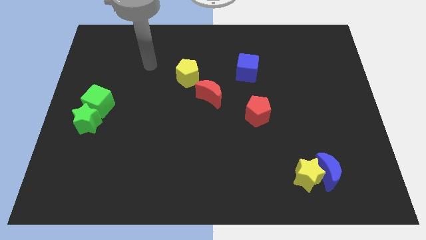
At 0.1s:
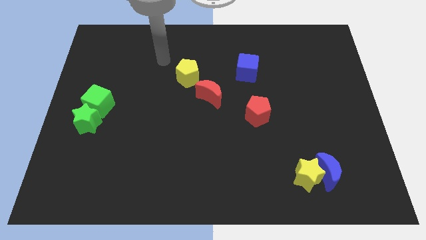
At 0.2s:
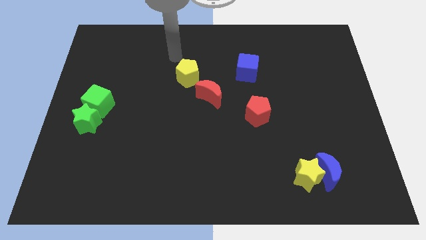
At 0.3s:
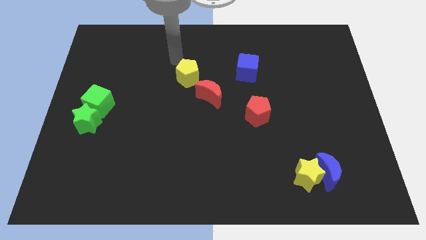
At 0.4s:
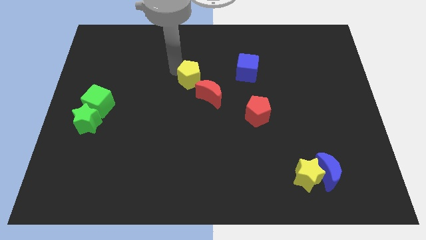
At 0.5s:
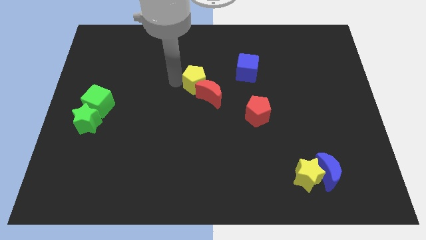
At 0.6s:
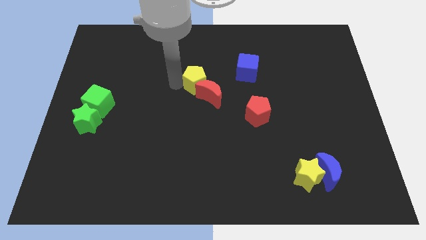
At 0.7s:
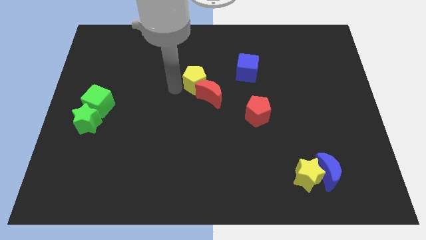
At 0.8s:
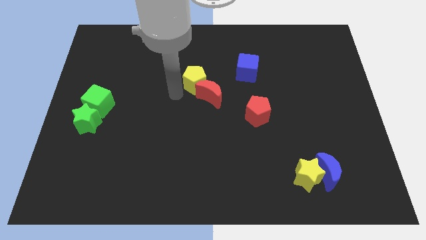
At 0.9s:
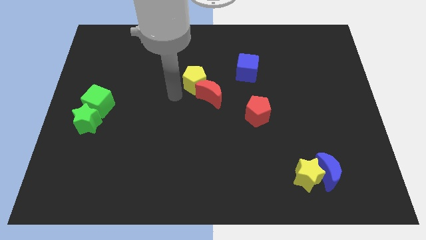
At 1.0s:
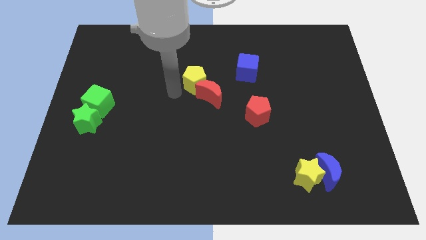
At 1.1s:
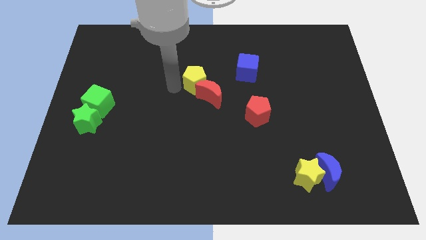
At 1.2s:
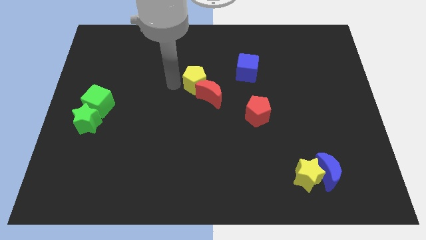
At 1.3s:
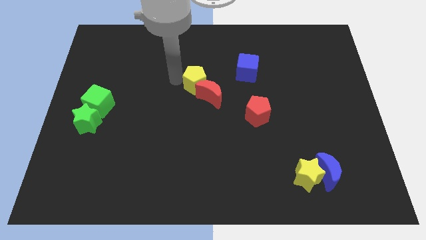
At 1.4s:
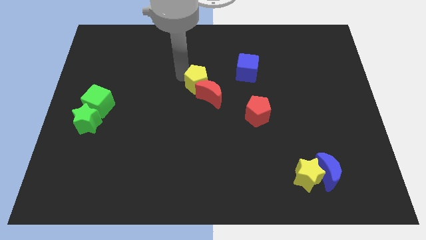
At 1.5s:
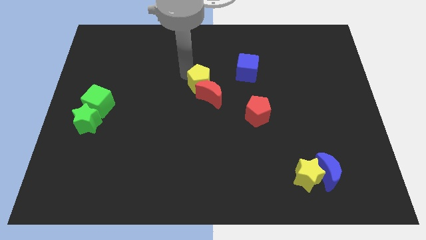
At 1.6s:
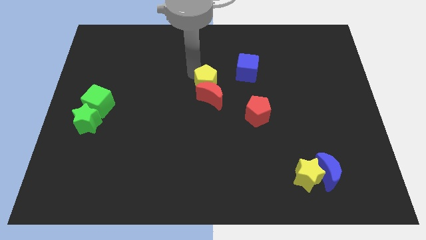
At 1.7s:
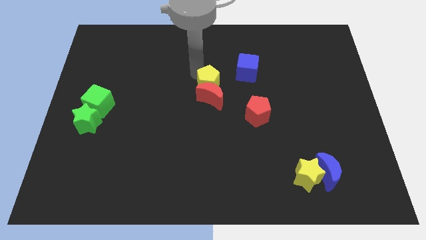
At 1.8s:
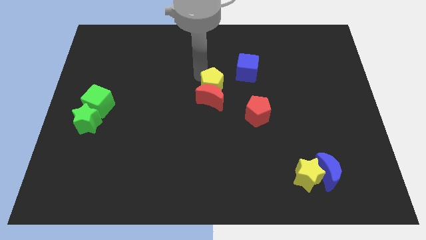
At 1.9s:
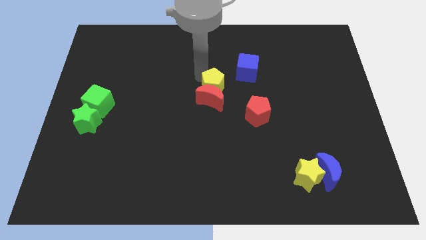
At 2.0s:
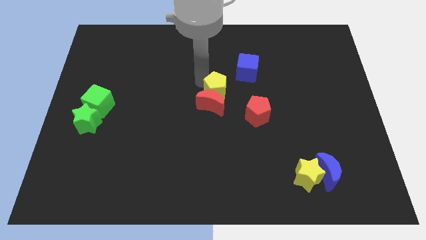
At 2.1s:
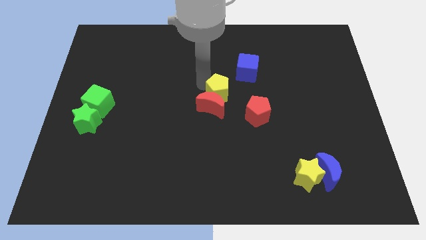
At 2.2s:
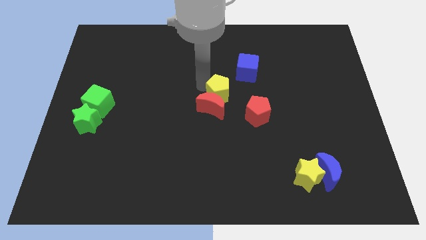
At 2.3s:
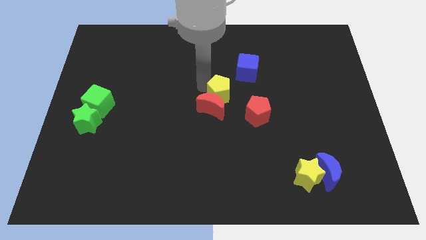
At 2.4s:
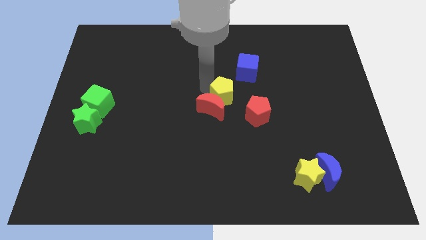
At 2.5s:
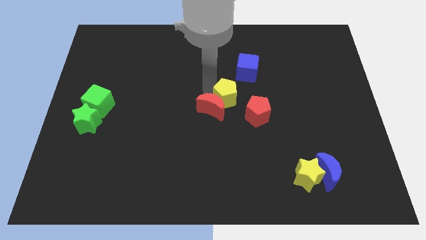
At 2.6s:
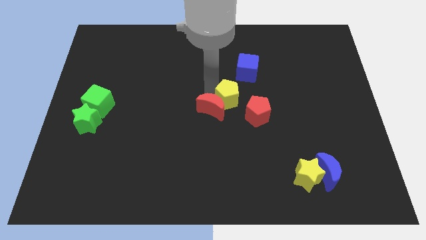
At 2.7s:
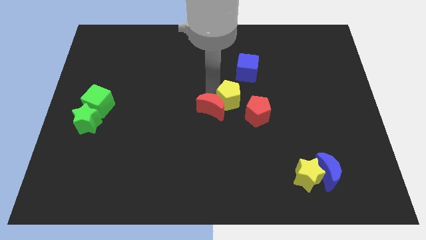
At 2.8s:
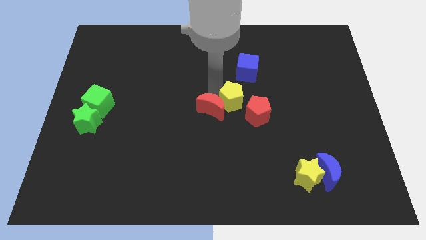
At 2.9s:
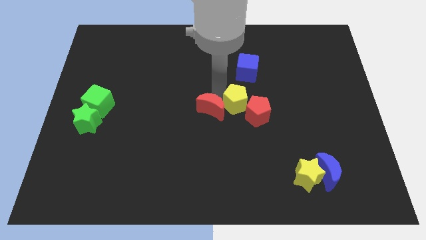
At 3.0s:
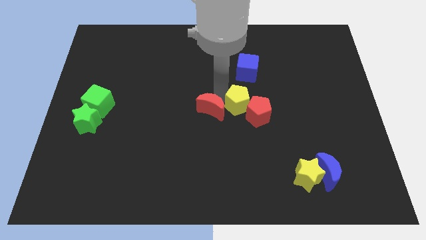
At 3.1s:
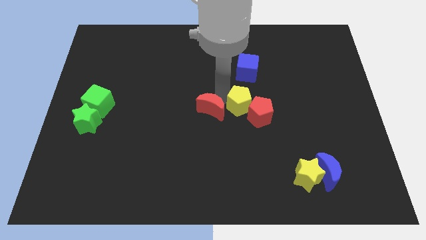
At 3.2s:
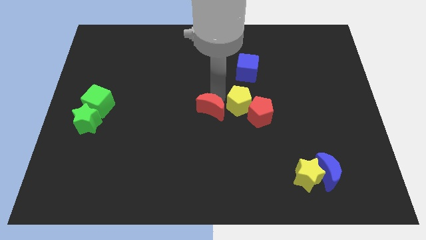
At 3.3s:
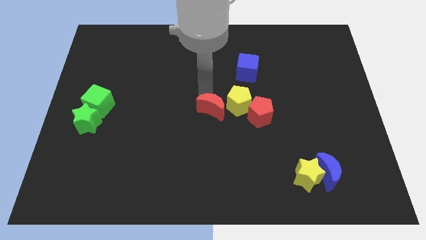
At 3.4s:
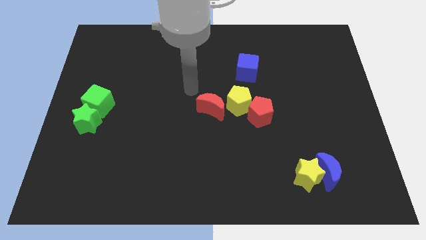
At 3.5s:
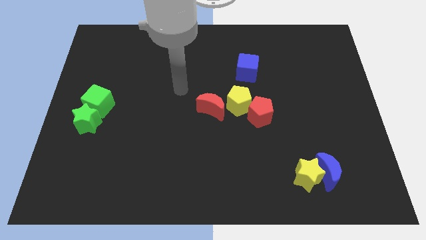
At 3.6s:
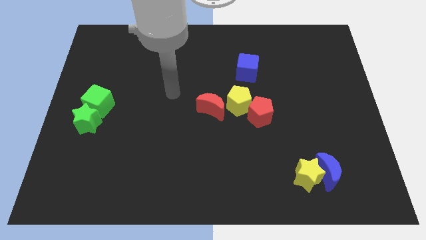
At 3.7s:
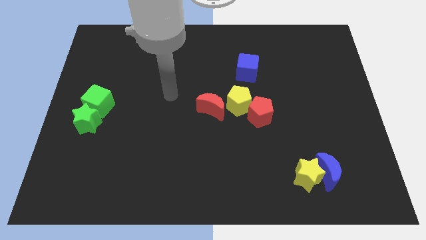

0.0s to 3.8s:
push the yellow pentagon into the red pentagon

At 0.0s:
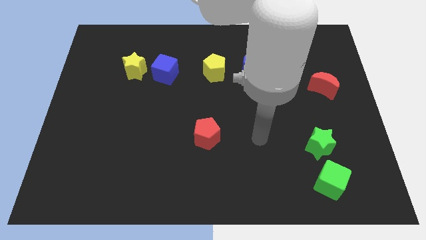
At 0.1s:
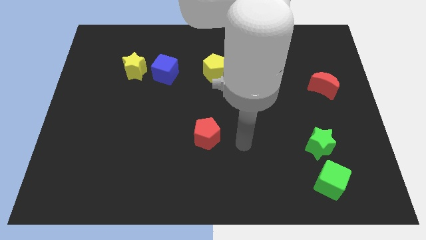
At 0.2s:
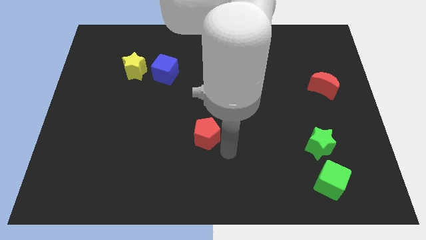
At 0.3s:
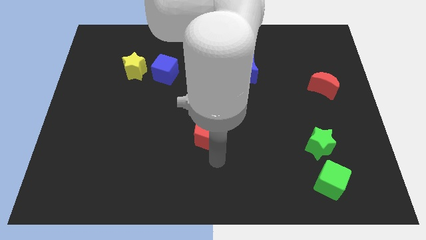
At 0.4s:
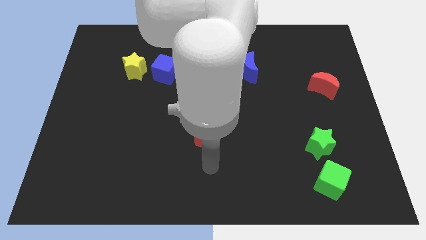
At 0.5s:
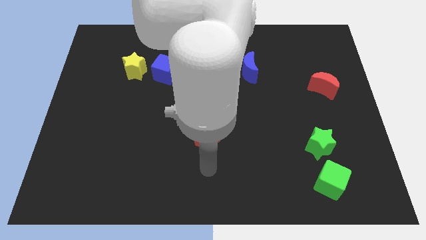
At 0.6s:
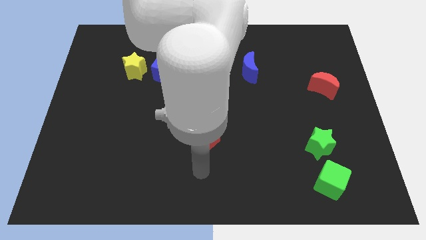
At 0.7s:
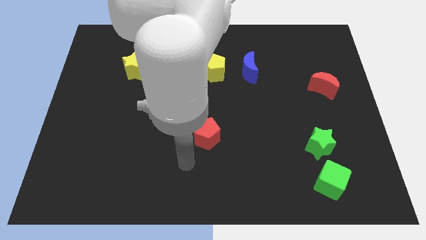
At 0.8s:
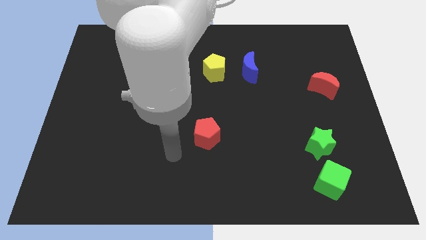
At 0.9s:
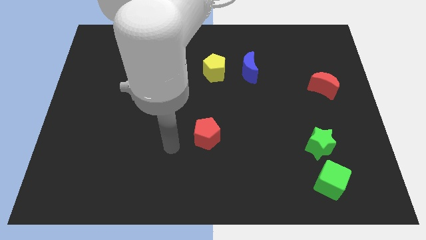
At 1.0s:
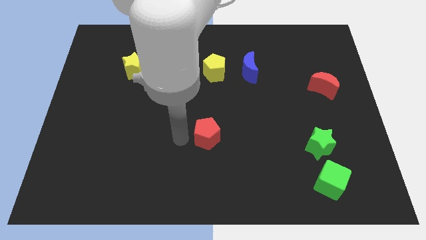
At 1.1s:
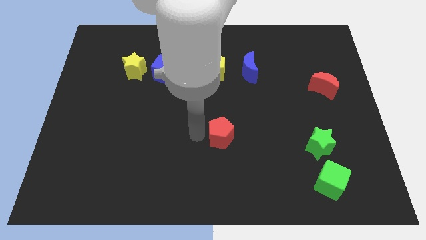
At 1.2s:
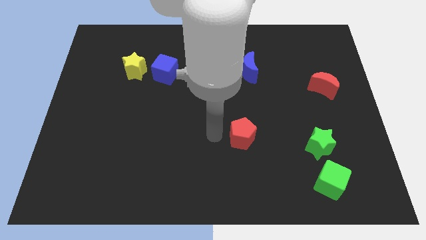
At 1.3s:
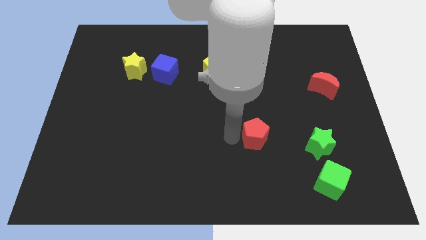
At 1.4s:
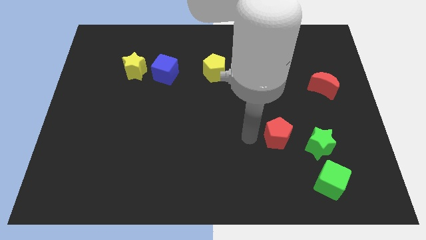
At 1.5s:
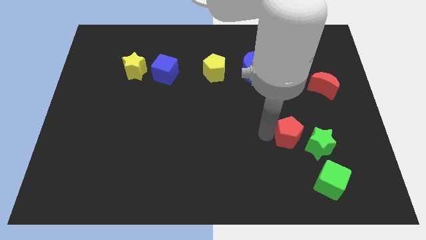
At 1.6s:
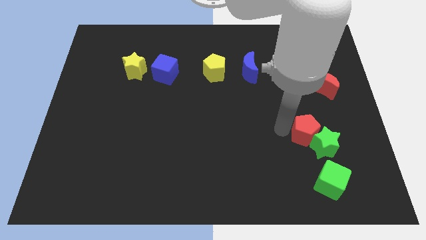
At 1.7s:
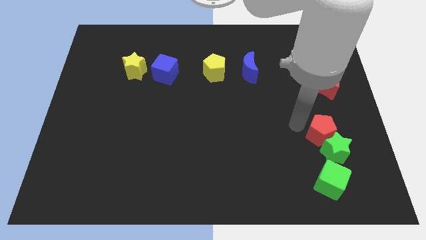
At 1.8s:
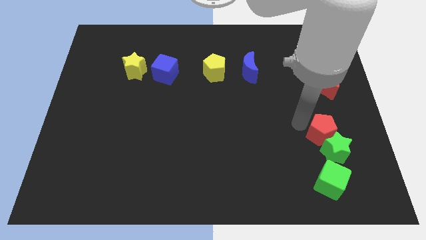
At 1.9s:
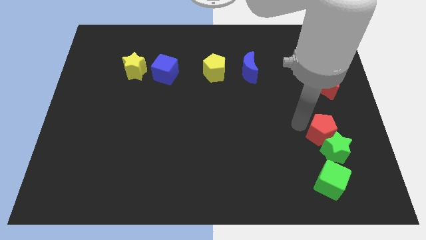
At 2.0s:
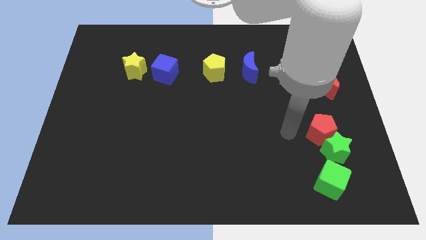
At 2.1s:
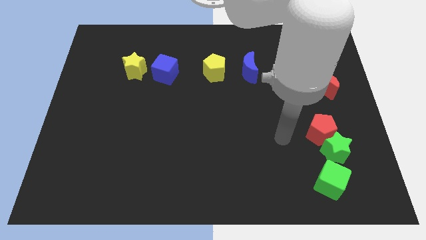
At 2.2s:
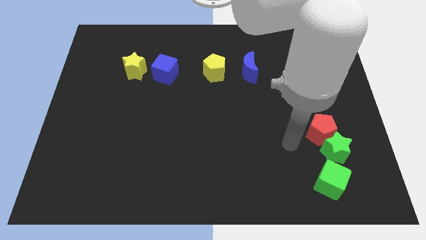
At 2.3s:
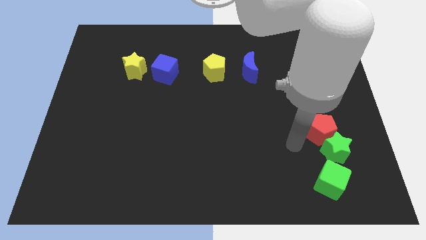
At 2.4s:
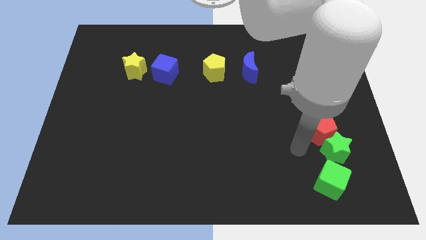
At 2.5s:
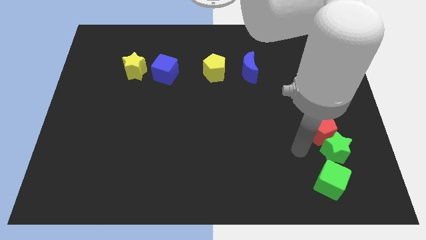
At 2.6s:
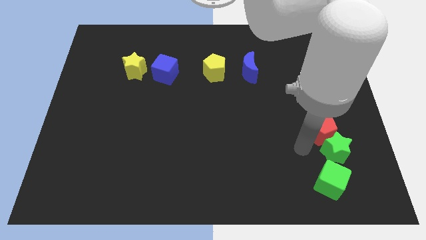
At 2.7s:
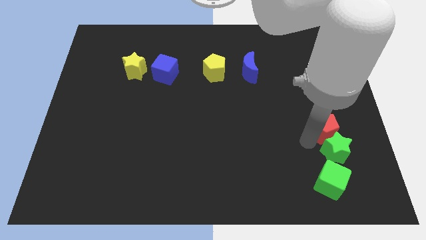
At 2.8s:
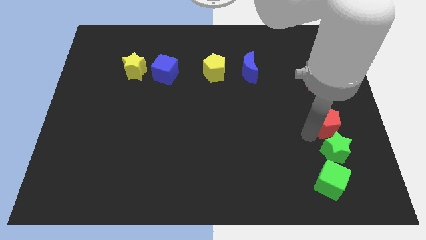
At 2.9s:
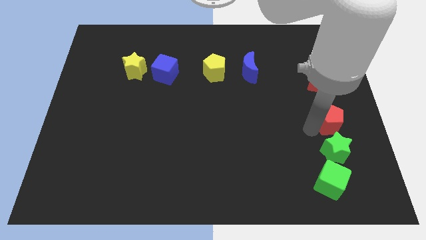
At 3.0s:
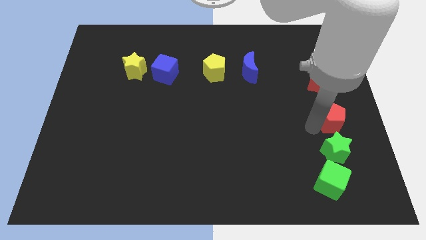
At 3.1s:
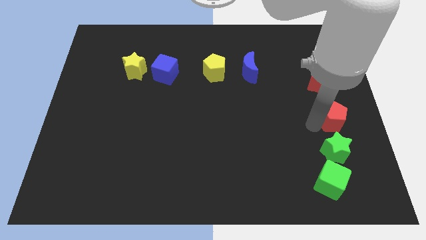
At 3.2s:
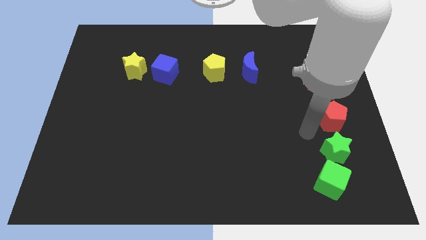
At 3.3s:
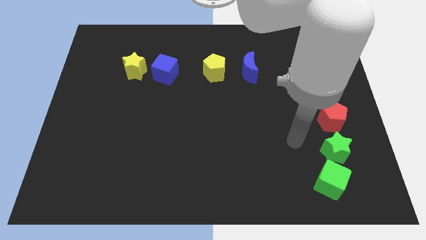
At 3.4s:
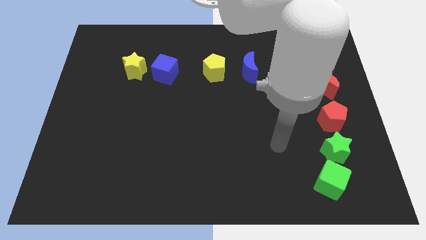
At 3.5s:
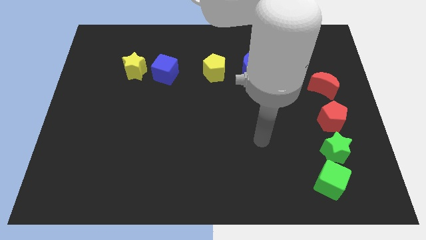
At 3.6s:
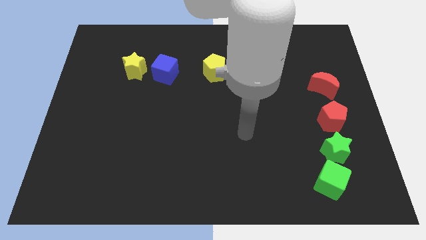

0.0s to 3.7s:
push the red pentagon in between the red crescent and green star

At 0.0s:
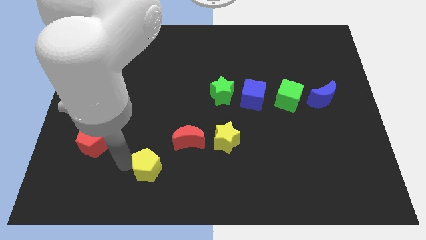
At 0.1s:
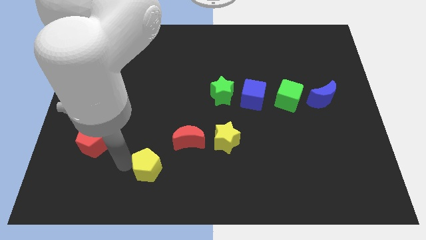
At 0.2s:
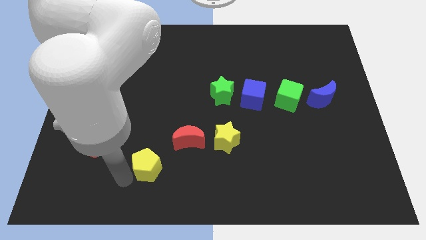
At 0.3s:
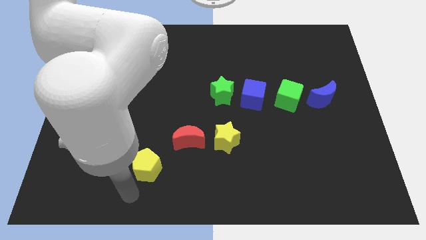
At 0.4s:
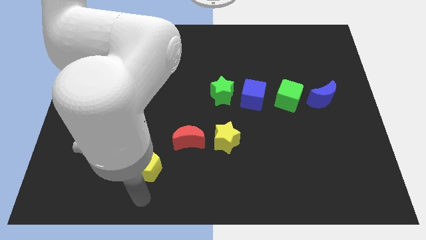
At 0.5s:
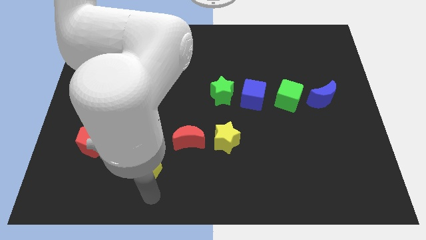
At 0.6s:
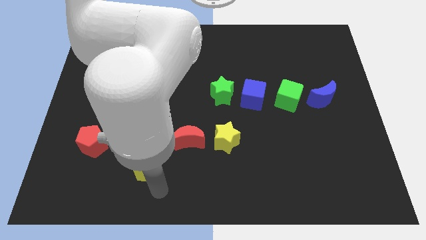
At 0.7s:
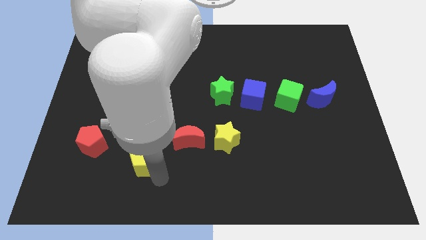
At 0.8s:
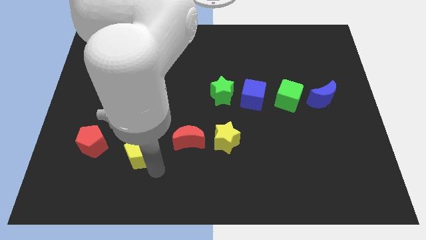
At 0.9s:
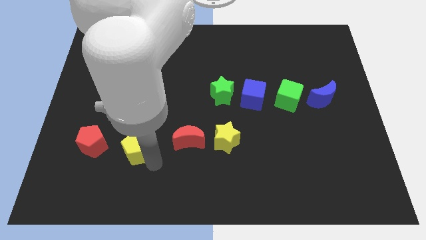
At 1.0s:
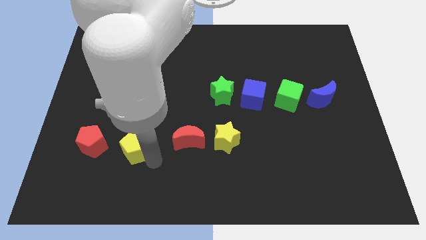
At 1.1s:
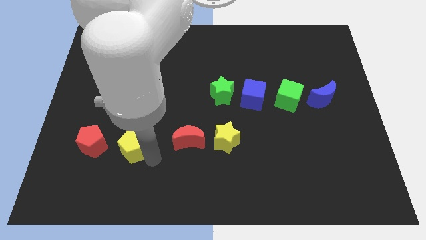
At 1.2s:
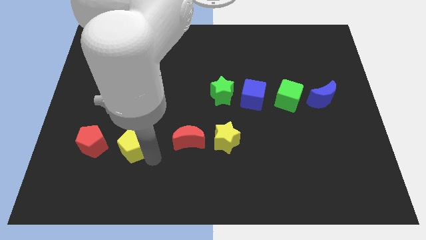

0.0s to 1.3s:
push yellow pentagon upwards

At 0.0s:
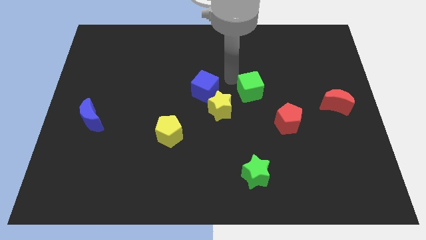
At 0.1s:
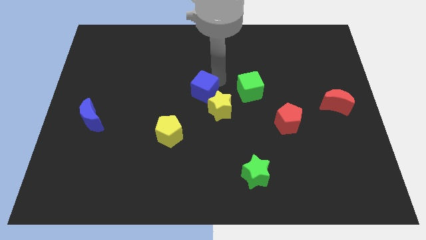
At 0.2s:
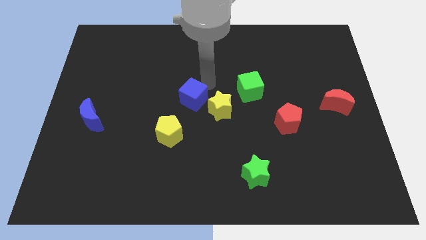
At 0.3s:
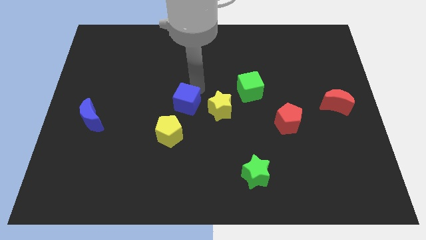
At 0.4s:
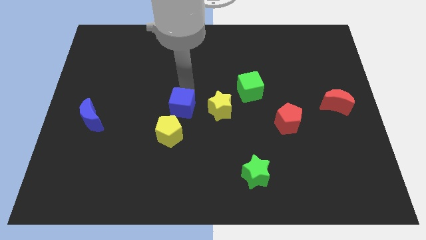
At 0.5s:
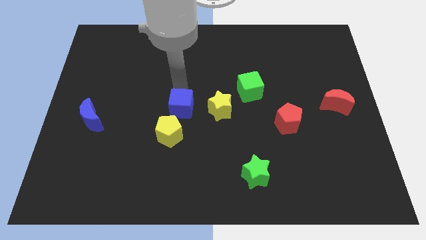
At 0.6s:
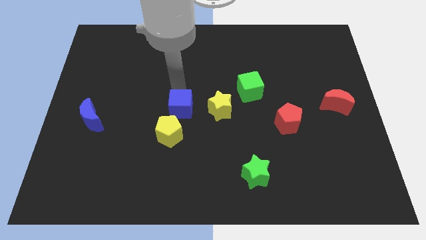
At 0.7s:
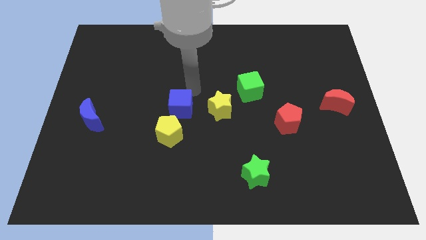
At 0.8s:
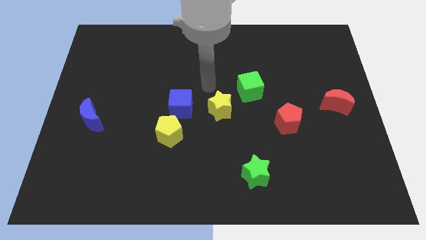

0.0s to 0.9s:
place the blue cube close to yellow pentagon
